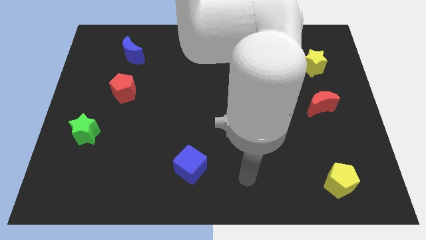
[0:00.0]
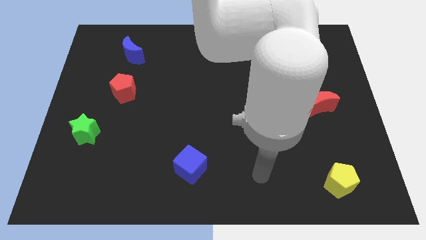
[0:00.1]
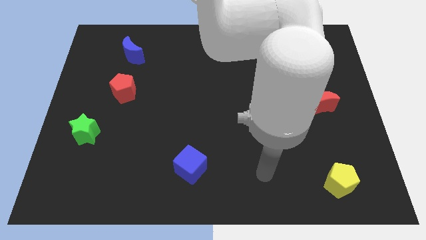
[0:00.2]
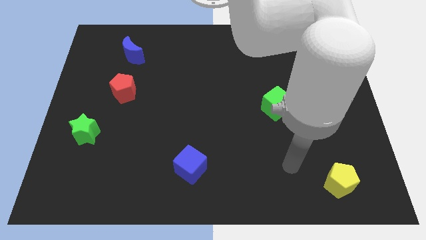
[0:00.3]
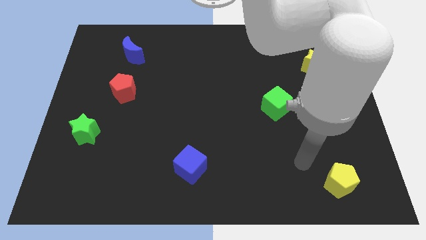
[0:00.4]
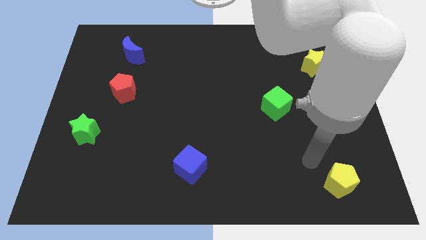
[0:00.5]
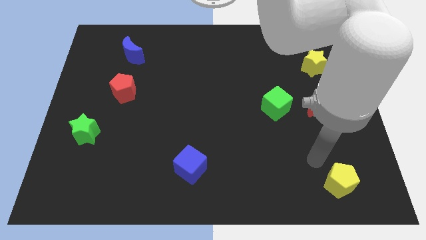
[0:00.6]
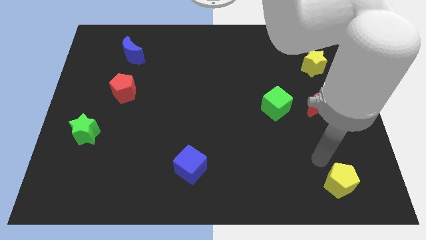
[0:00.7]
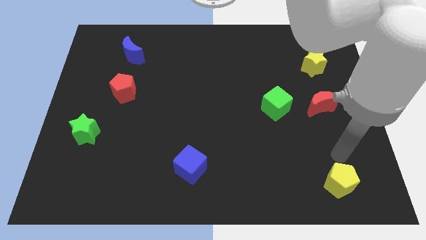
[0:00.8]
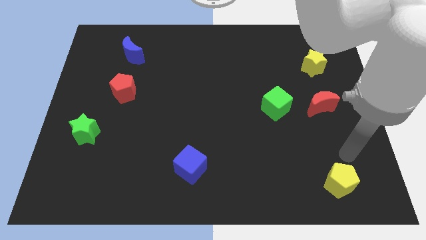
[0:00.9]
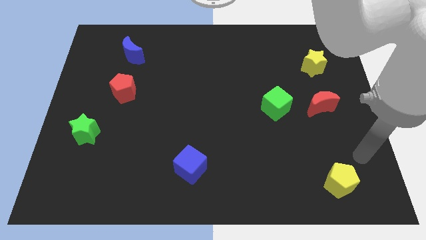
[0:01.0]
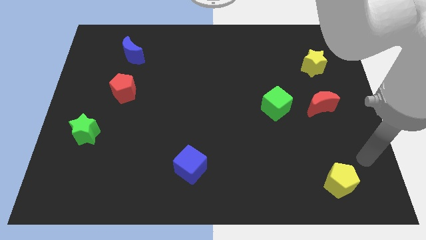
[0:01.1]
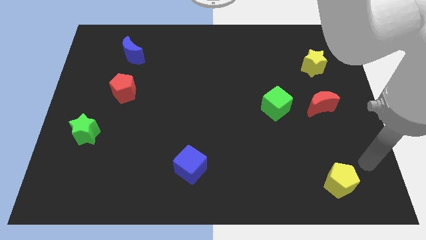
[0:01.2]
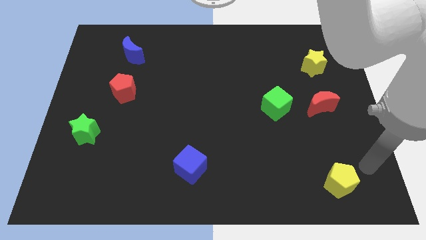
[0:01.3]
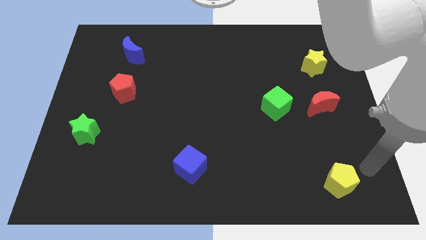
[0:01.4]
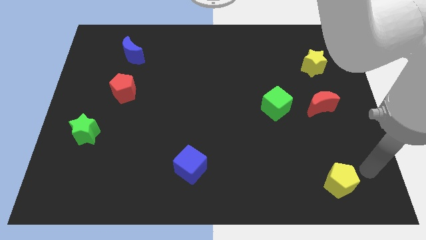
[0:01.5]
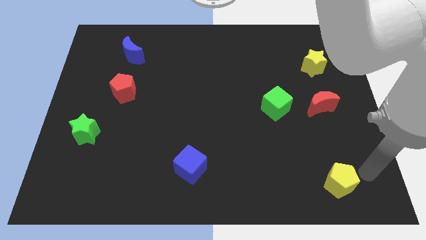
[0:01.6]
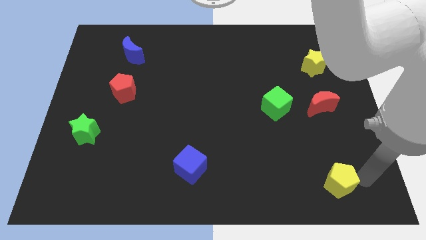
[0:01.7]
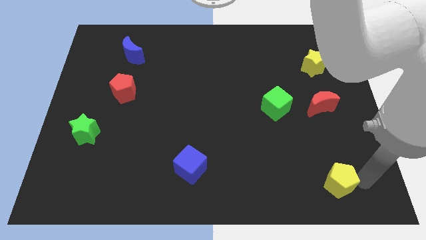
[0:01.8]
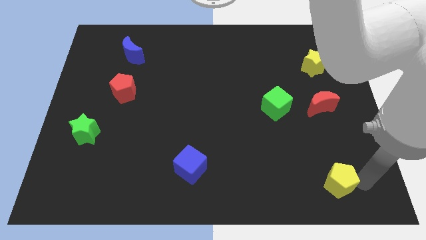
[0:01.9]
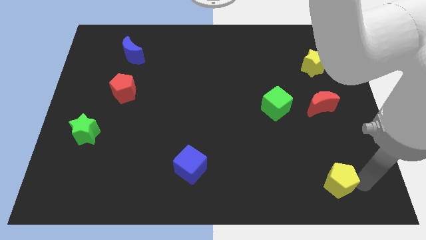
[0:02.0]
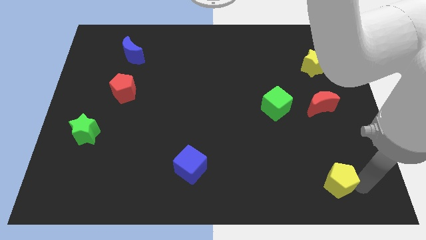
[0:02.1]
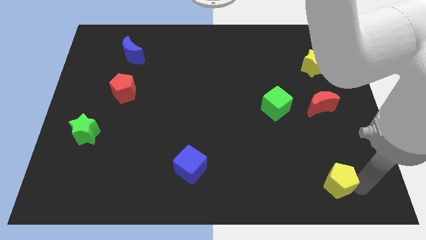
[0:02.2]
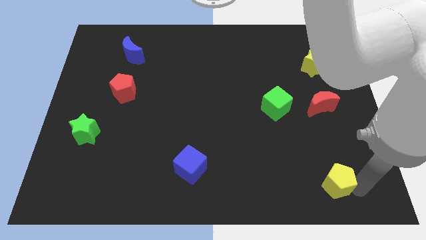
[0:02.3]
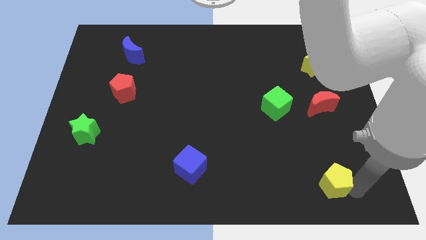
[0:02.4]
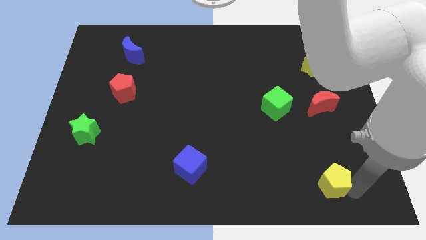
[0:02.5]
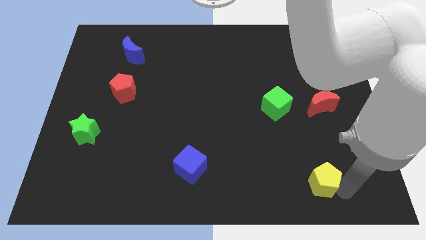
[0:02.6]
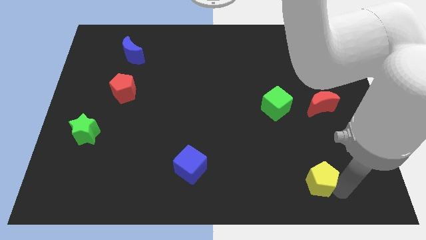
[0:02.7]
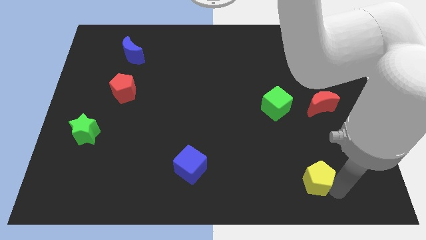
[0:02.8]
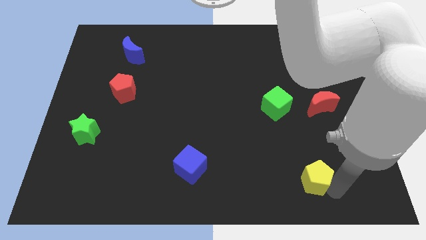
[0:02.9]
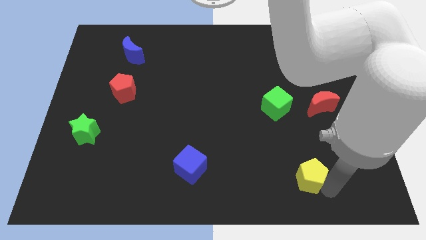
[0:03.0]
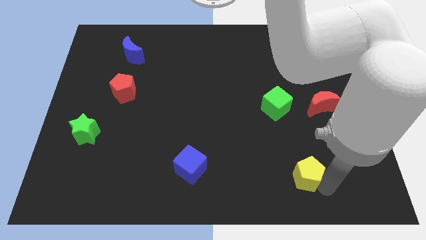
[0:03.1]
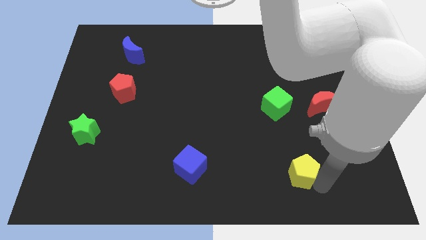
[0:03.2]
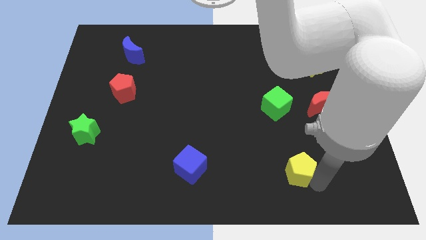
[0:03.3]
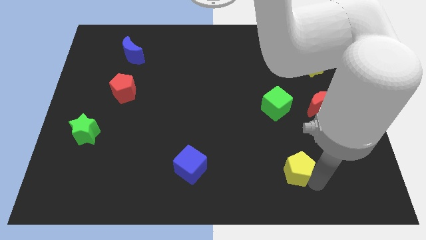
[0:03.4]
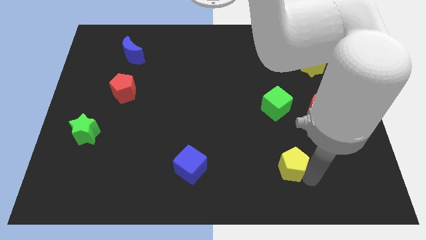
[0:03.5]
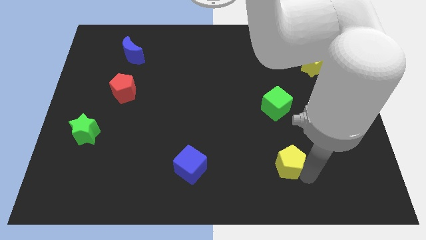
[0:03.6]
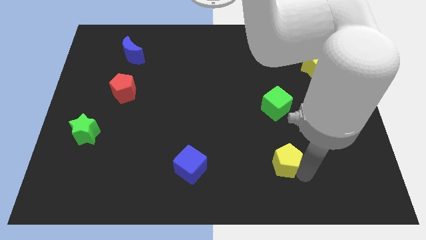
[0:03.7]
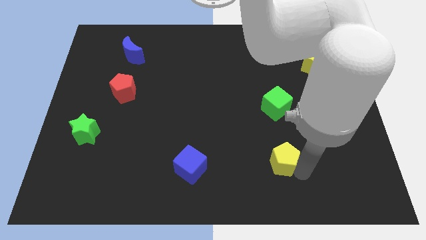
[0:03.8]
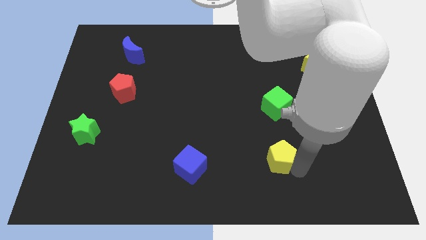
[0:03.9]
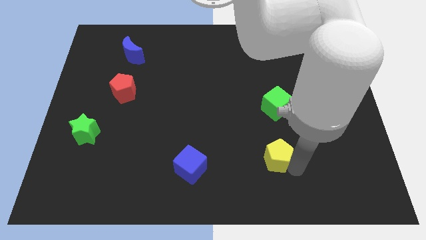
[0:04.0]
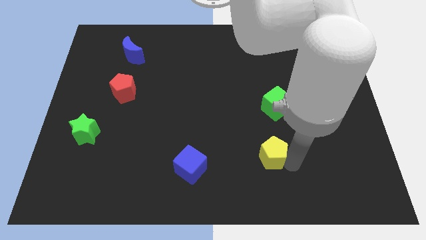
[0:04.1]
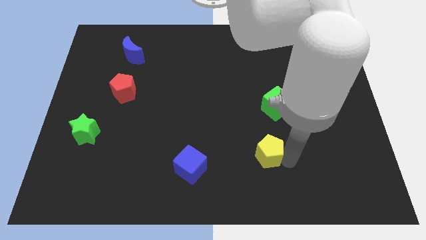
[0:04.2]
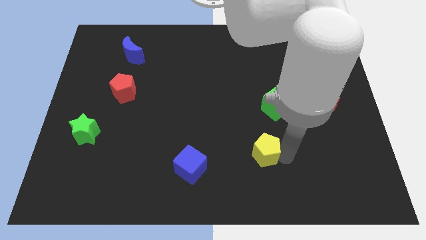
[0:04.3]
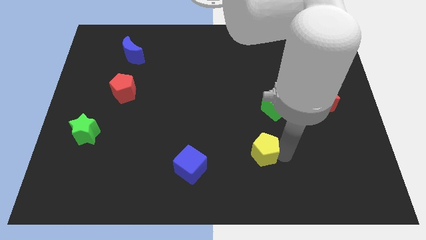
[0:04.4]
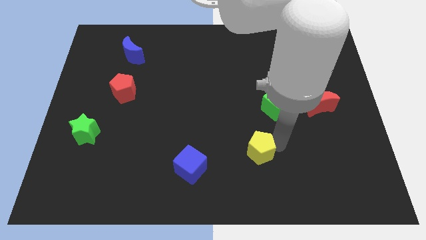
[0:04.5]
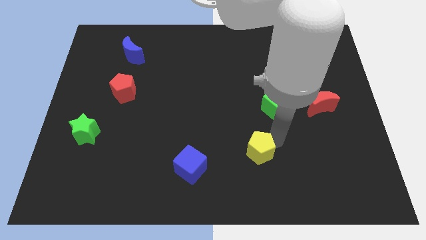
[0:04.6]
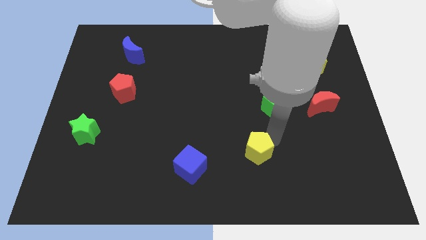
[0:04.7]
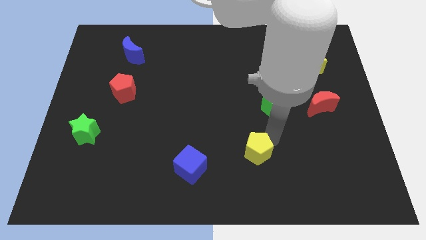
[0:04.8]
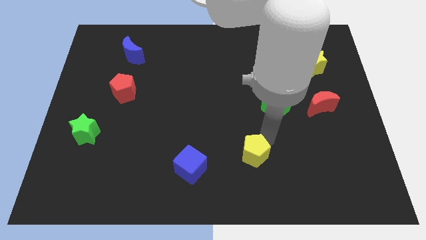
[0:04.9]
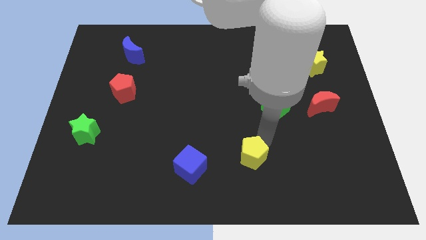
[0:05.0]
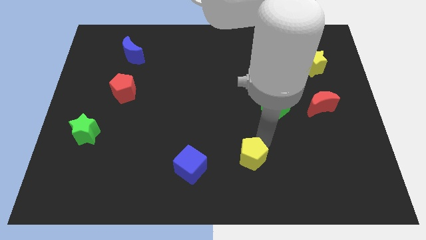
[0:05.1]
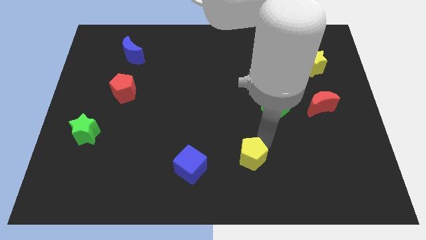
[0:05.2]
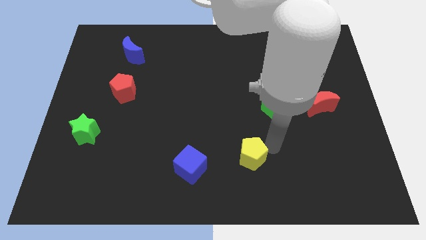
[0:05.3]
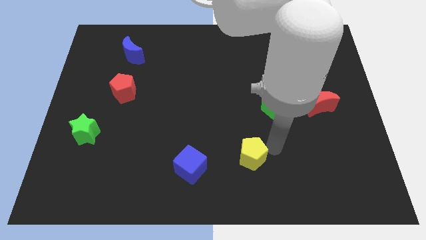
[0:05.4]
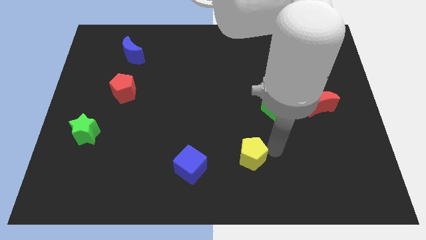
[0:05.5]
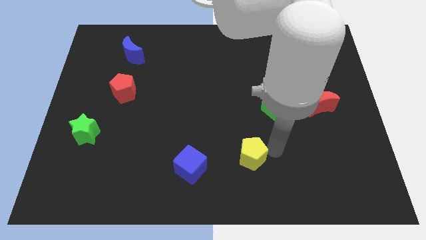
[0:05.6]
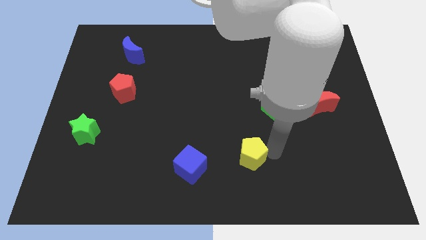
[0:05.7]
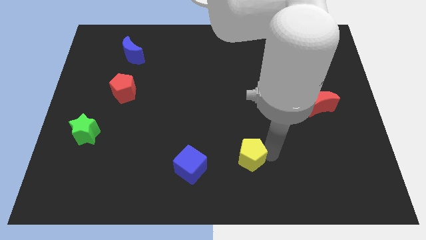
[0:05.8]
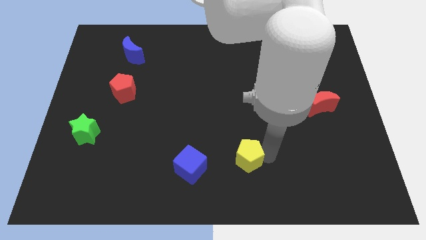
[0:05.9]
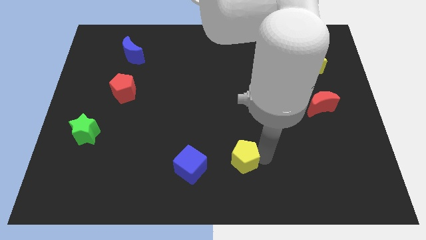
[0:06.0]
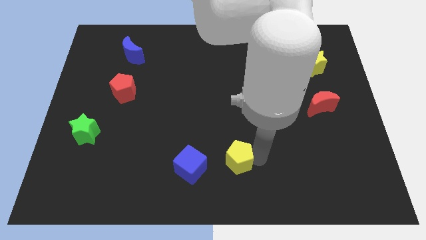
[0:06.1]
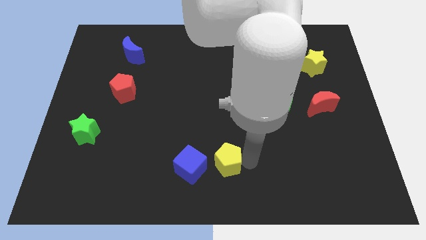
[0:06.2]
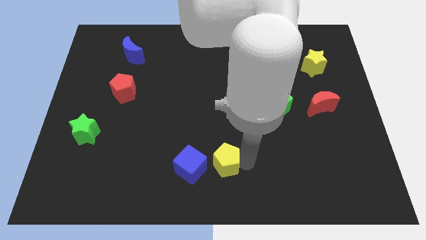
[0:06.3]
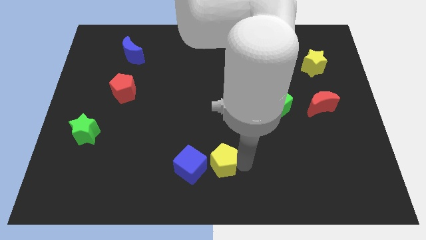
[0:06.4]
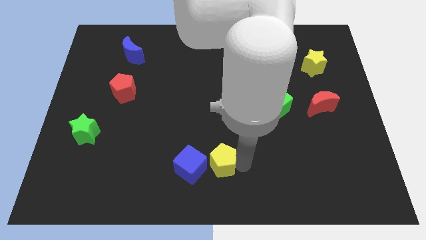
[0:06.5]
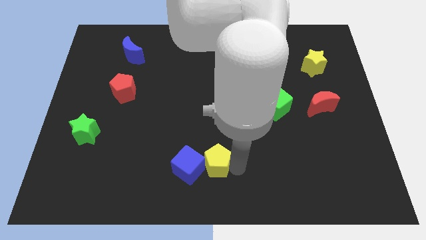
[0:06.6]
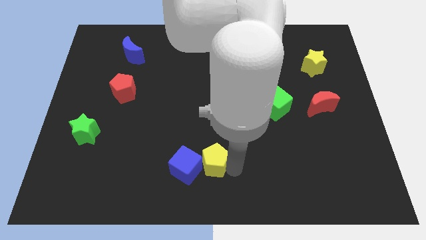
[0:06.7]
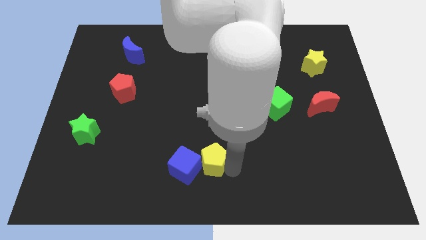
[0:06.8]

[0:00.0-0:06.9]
push the yellow pentagon towards the blue cube

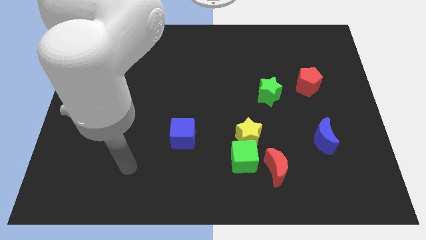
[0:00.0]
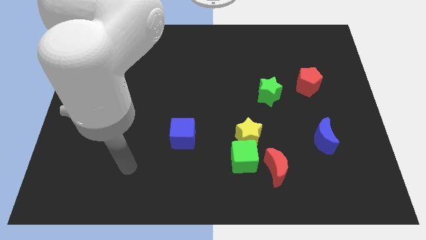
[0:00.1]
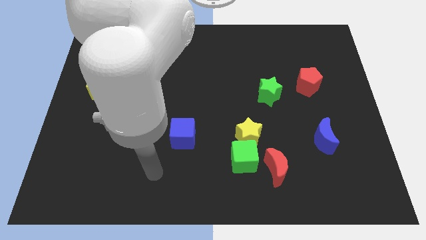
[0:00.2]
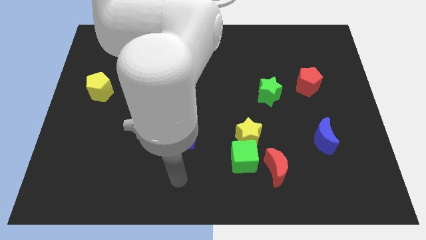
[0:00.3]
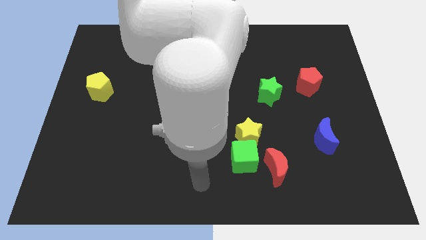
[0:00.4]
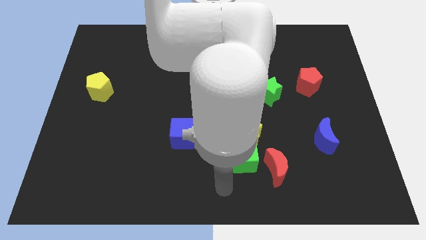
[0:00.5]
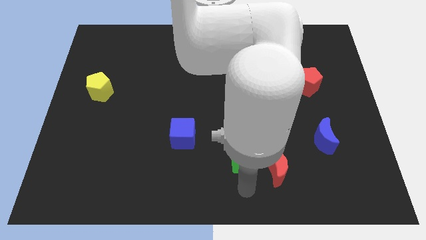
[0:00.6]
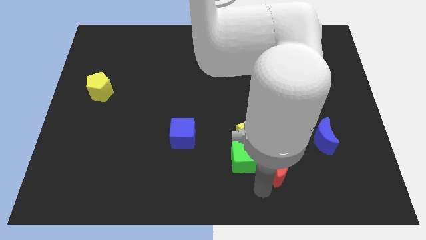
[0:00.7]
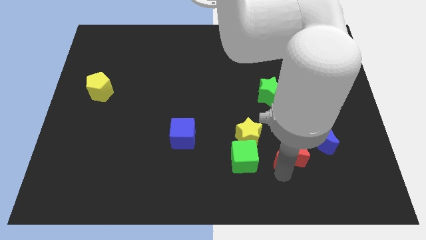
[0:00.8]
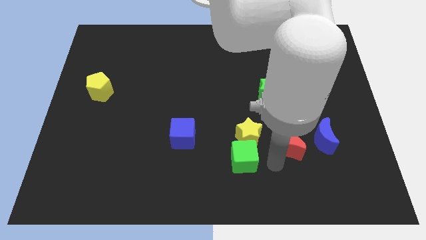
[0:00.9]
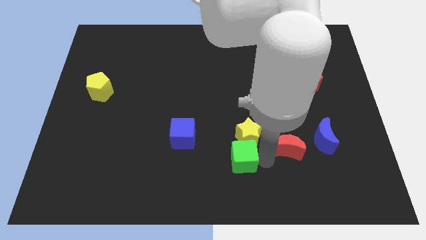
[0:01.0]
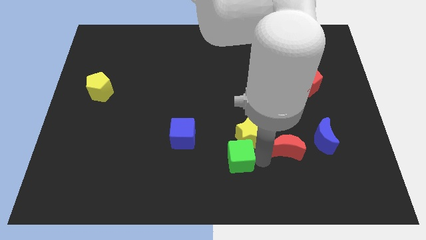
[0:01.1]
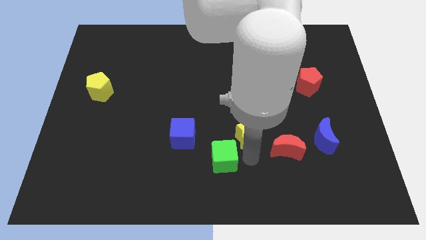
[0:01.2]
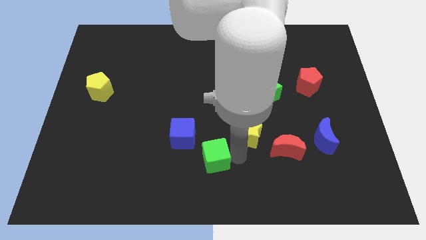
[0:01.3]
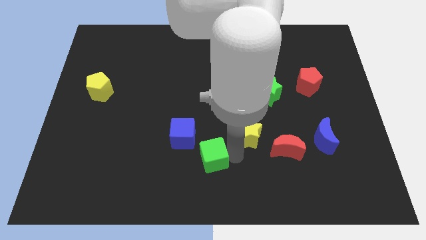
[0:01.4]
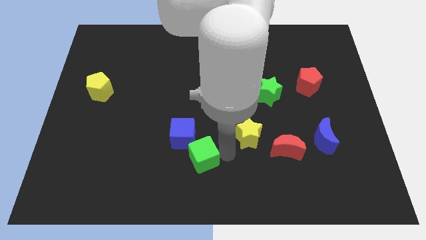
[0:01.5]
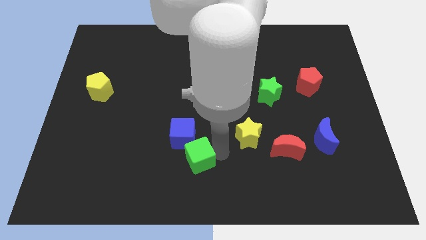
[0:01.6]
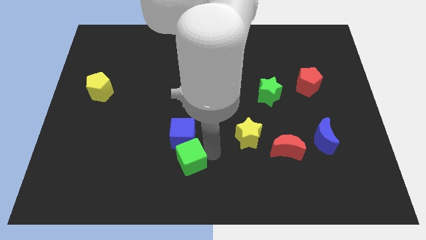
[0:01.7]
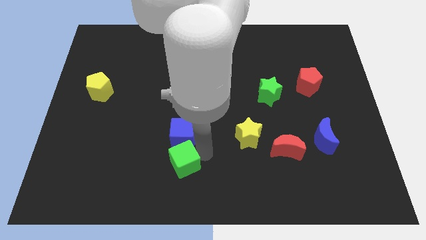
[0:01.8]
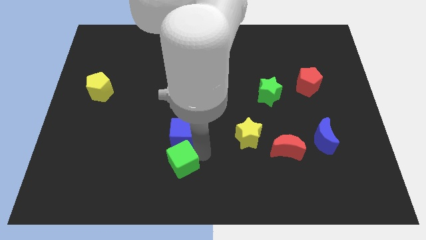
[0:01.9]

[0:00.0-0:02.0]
put the green cube towards the blue cube
